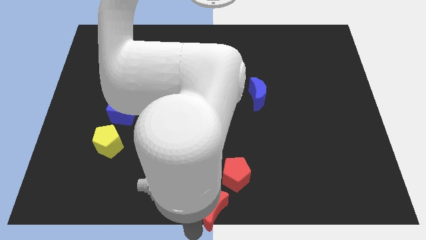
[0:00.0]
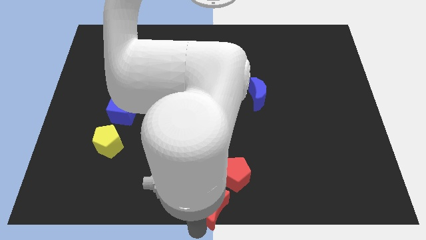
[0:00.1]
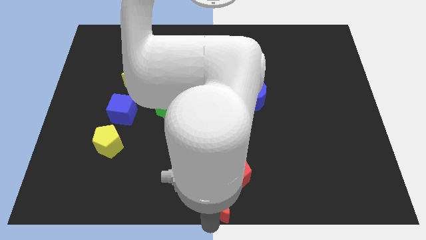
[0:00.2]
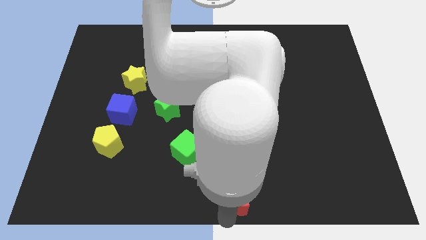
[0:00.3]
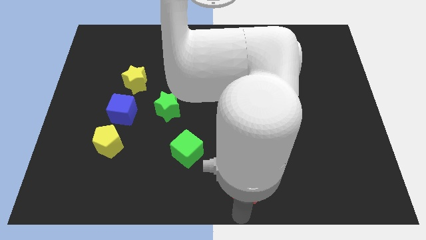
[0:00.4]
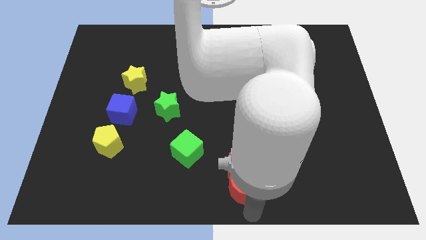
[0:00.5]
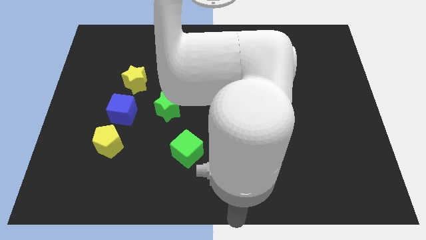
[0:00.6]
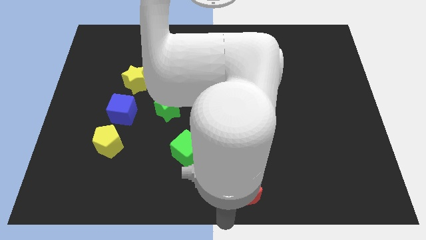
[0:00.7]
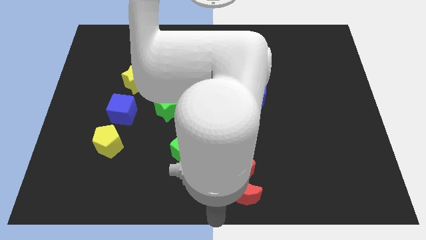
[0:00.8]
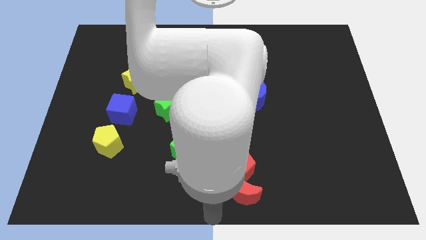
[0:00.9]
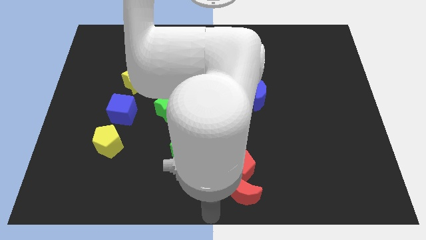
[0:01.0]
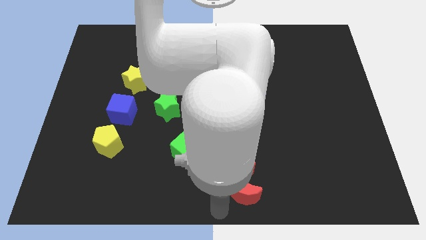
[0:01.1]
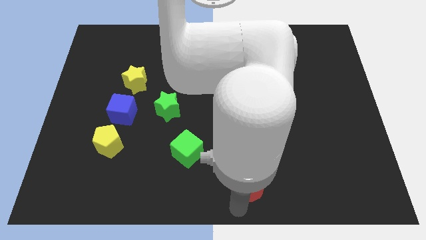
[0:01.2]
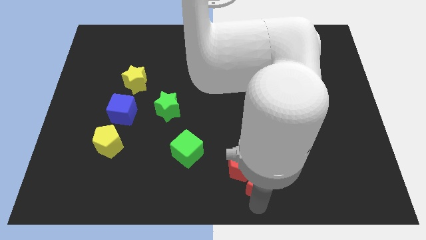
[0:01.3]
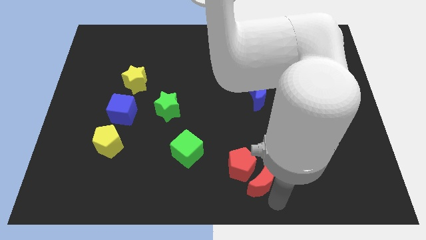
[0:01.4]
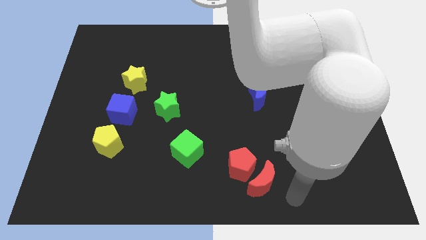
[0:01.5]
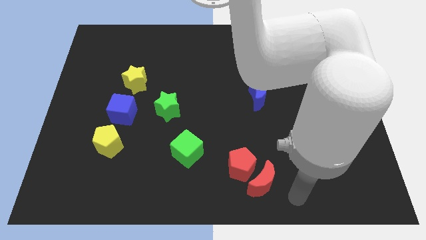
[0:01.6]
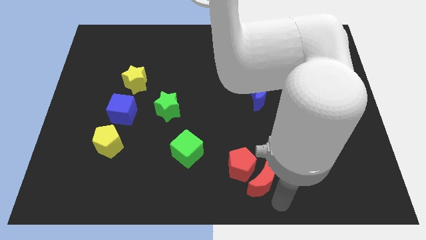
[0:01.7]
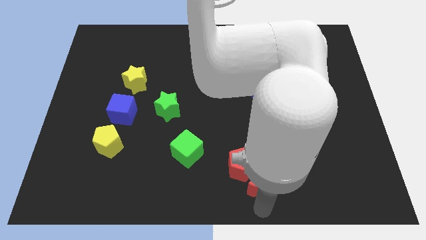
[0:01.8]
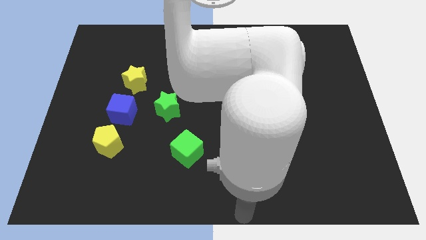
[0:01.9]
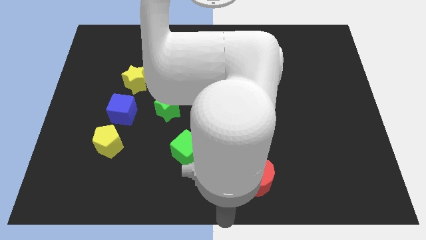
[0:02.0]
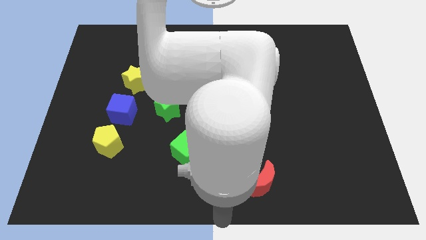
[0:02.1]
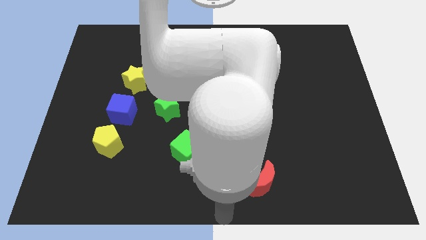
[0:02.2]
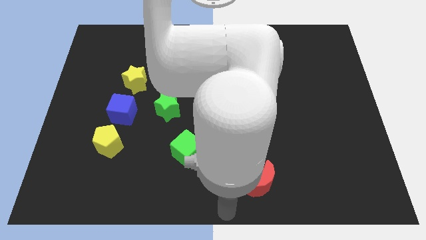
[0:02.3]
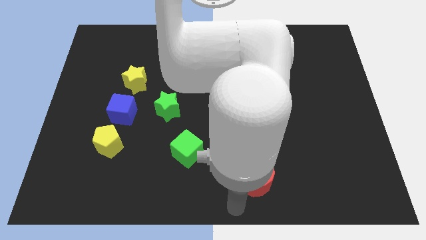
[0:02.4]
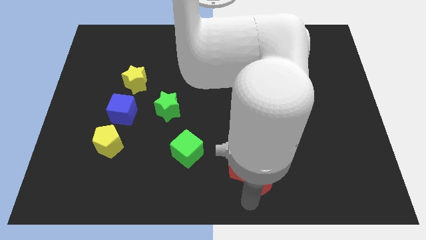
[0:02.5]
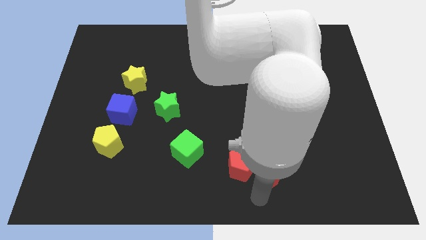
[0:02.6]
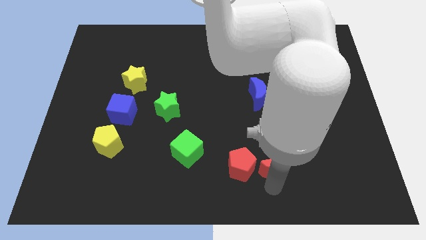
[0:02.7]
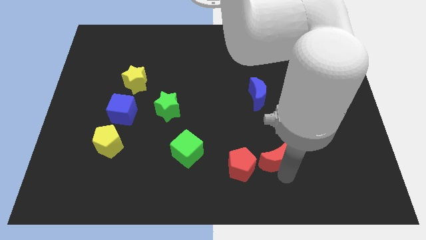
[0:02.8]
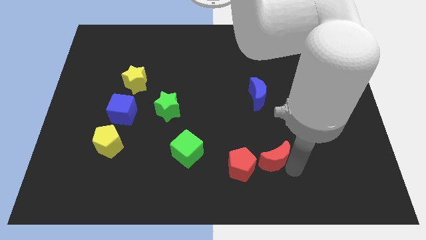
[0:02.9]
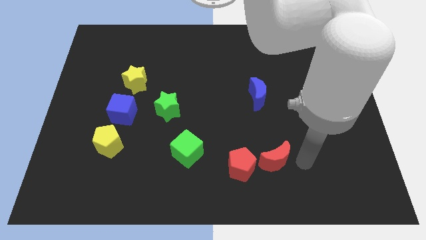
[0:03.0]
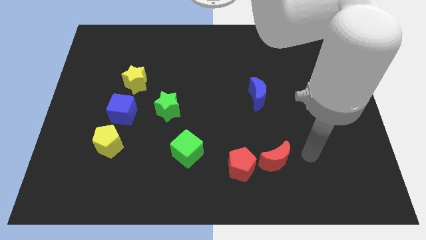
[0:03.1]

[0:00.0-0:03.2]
push red crescent below blue crescent

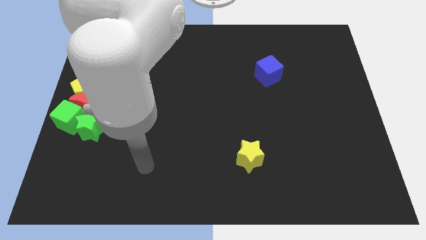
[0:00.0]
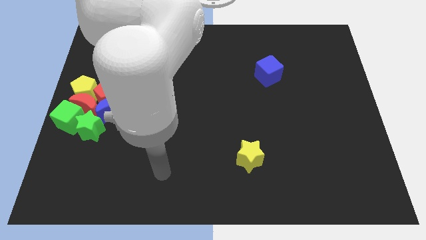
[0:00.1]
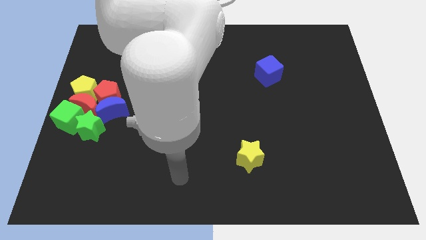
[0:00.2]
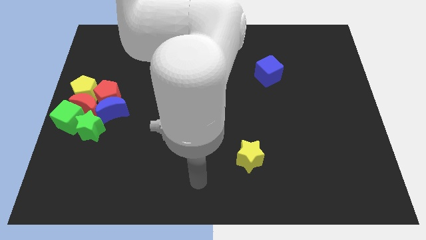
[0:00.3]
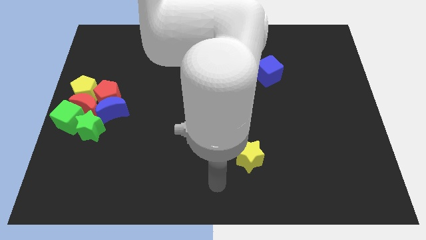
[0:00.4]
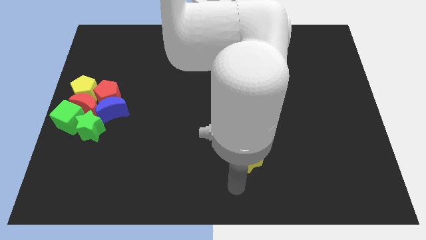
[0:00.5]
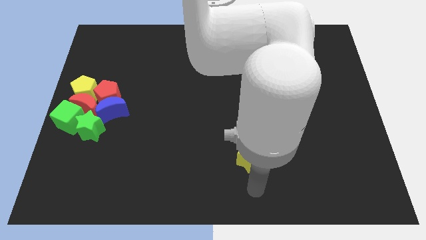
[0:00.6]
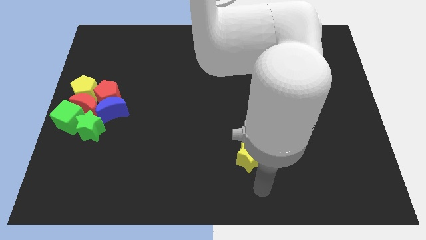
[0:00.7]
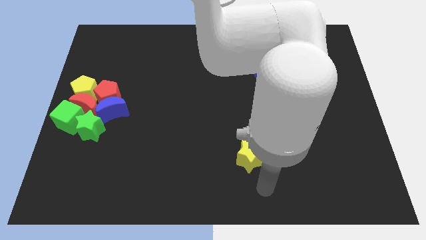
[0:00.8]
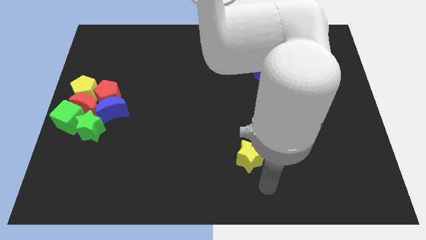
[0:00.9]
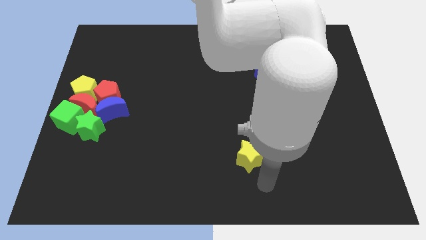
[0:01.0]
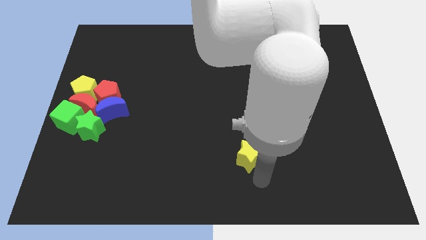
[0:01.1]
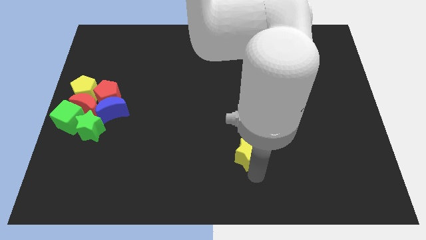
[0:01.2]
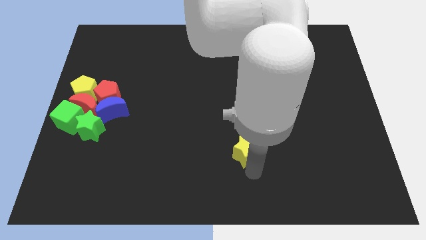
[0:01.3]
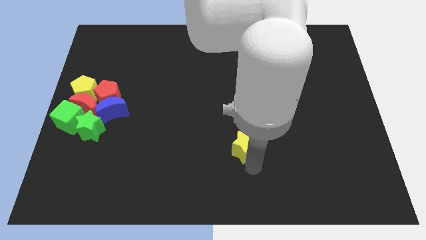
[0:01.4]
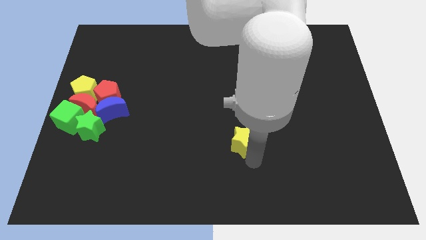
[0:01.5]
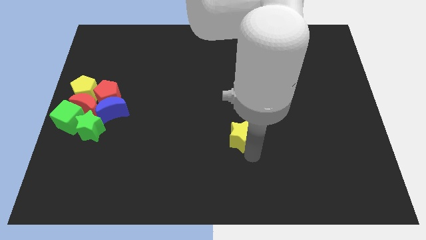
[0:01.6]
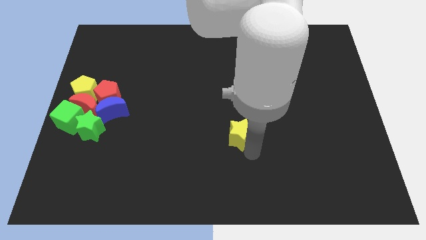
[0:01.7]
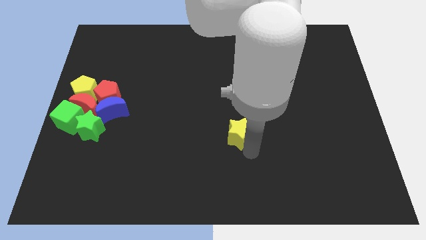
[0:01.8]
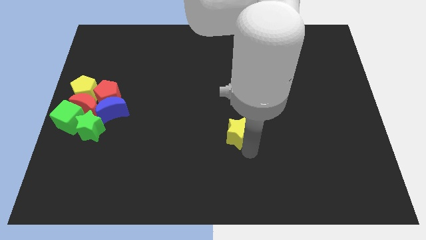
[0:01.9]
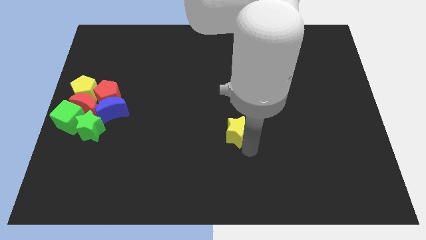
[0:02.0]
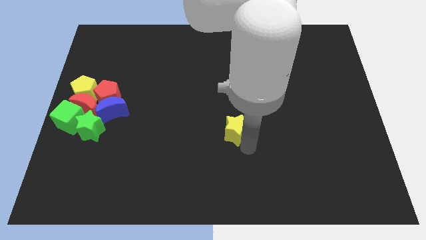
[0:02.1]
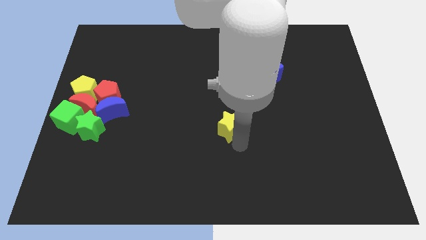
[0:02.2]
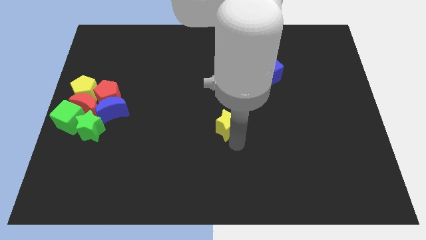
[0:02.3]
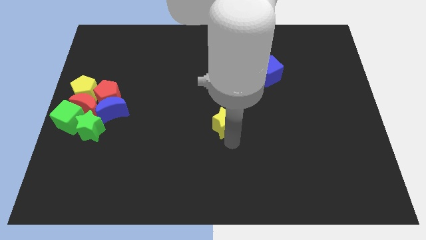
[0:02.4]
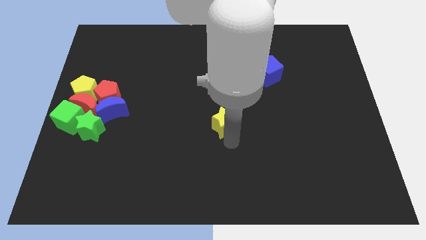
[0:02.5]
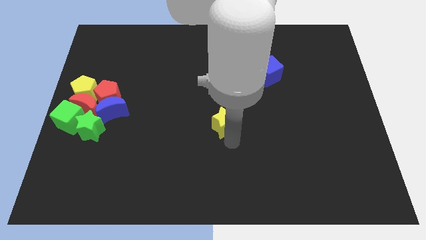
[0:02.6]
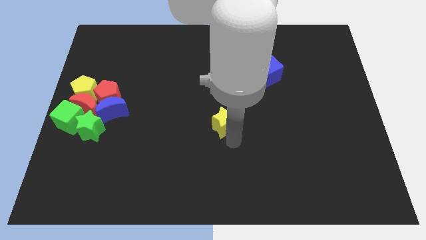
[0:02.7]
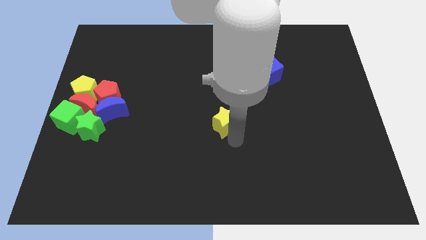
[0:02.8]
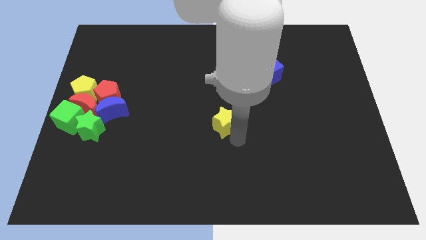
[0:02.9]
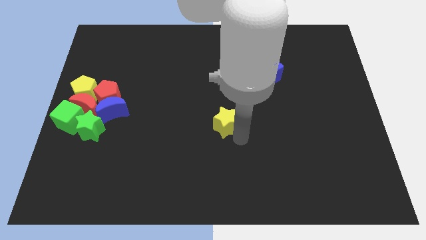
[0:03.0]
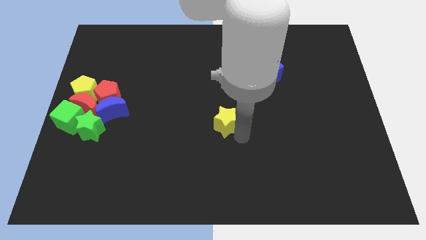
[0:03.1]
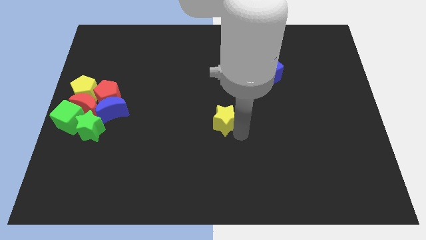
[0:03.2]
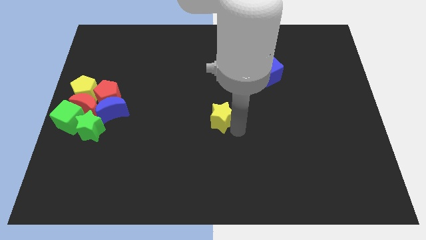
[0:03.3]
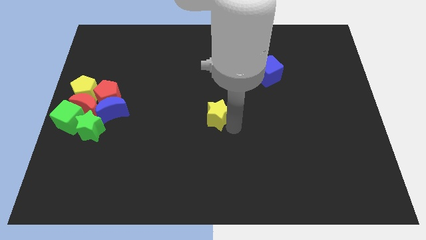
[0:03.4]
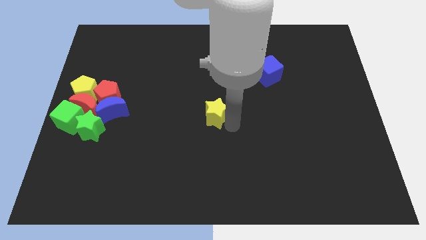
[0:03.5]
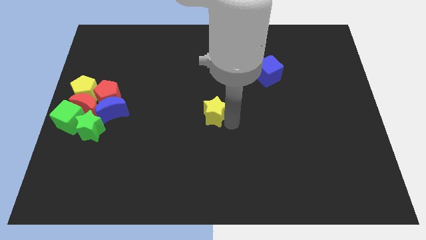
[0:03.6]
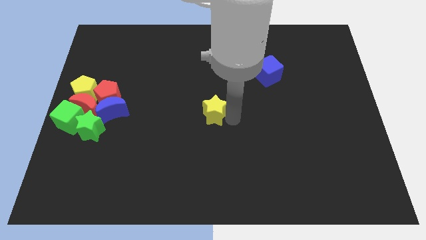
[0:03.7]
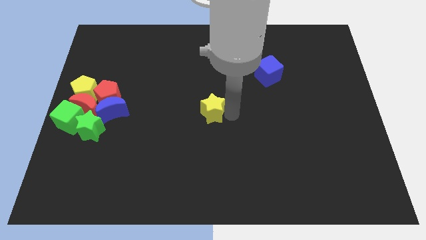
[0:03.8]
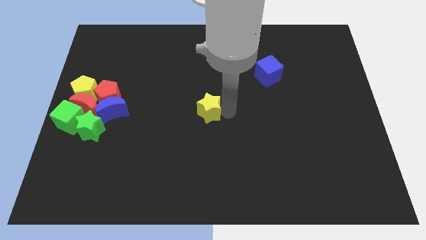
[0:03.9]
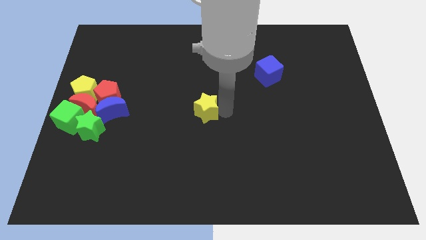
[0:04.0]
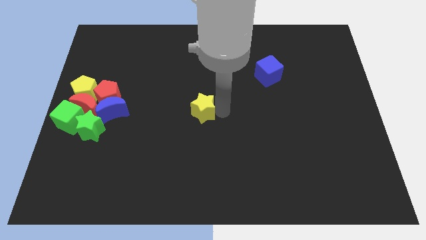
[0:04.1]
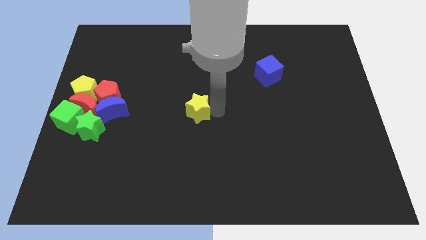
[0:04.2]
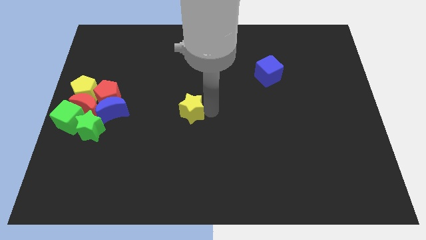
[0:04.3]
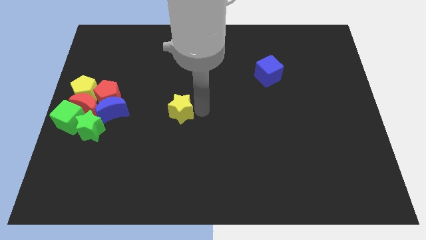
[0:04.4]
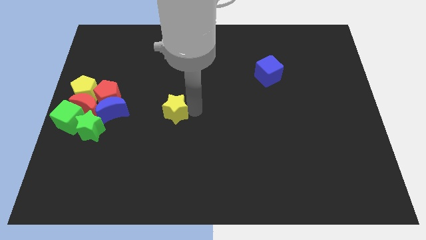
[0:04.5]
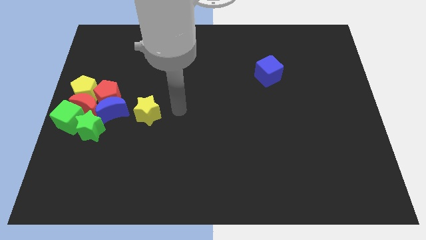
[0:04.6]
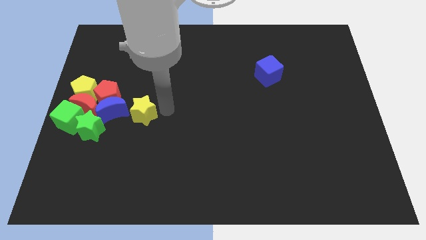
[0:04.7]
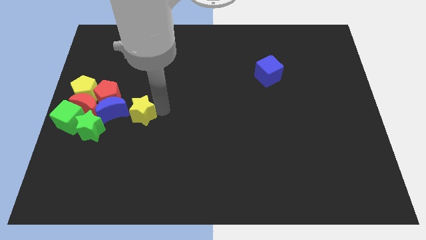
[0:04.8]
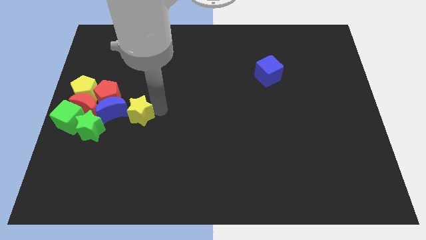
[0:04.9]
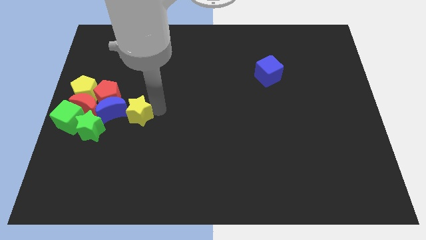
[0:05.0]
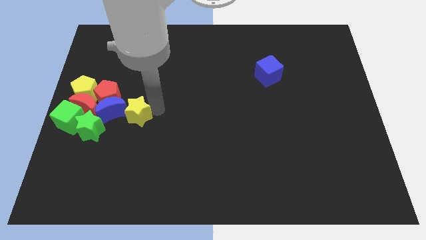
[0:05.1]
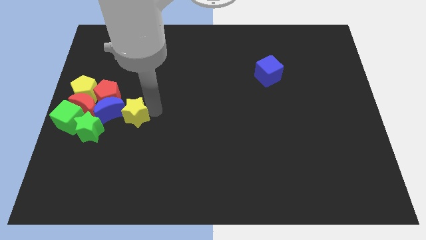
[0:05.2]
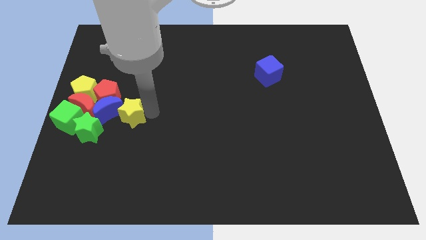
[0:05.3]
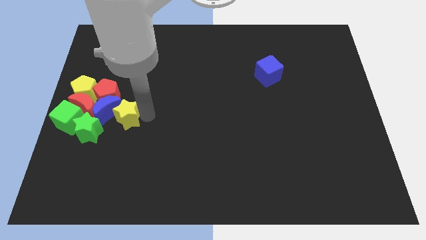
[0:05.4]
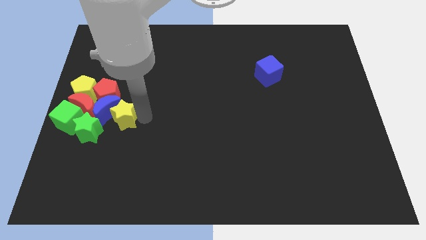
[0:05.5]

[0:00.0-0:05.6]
push the yellow star to the group of blocks

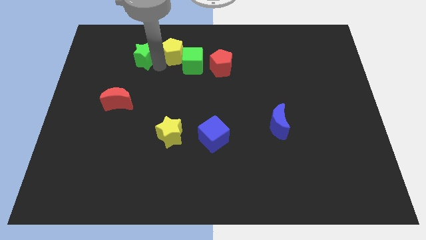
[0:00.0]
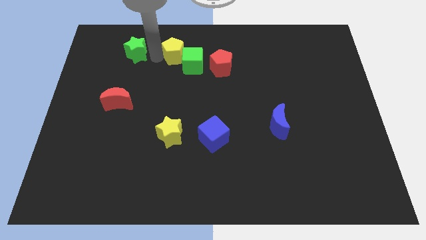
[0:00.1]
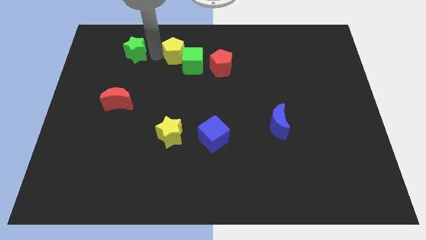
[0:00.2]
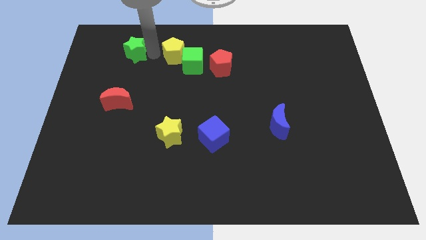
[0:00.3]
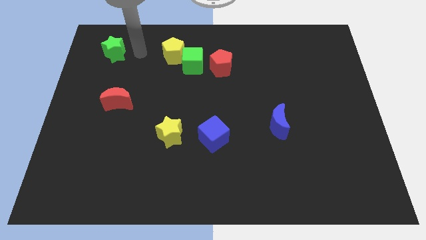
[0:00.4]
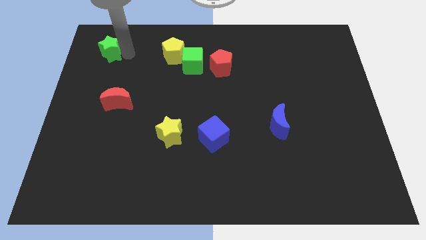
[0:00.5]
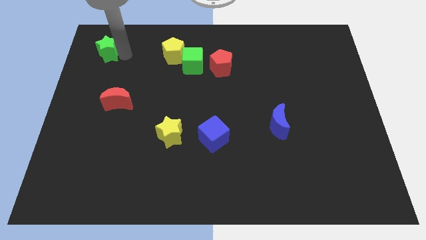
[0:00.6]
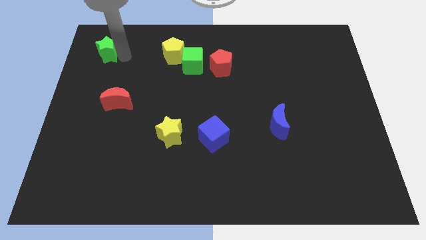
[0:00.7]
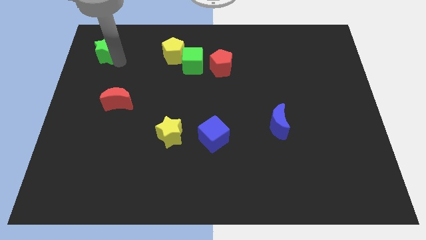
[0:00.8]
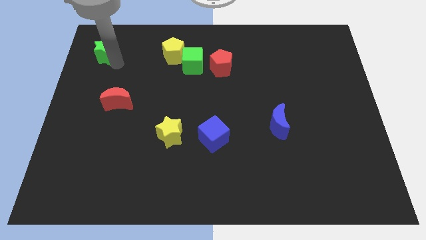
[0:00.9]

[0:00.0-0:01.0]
separate green star from yellow pentagon
